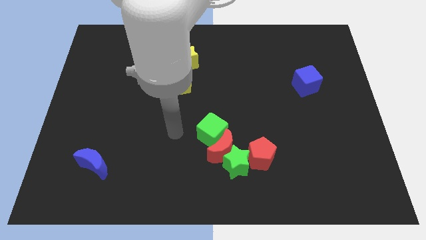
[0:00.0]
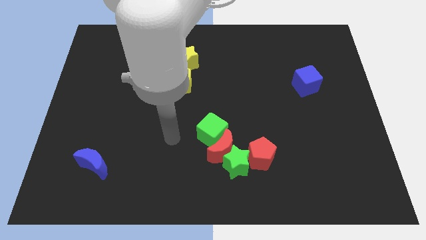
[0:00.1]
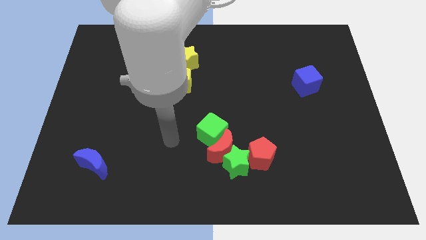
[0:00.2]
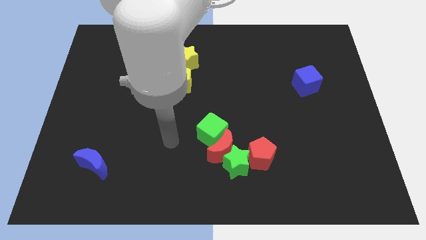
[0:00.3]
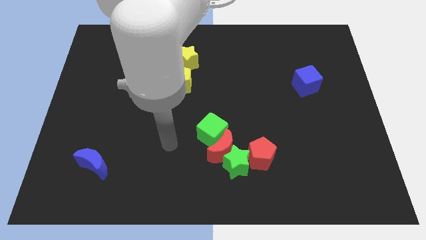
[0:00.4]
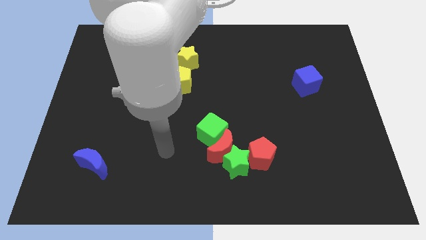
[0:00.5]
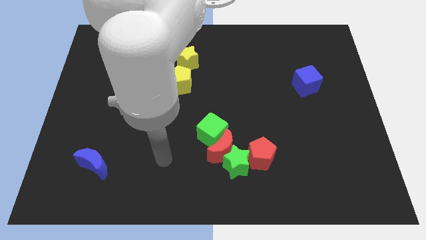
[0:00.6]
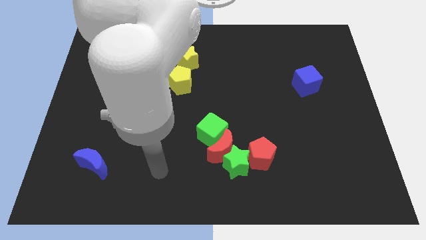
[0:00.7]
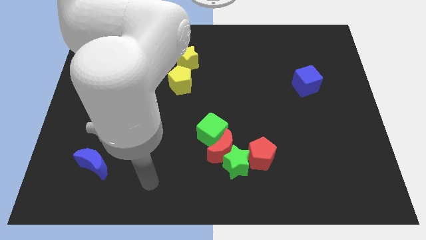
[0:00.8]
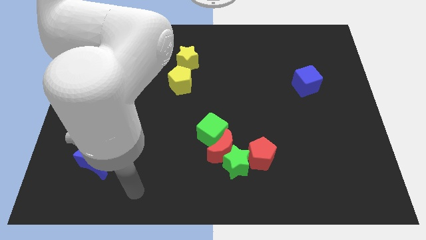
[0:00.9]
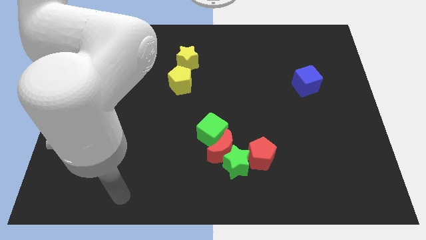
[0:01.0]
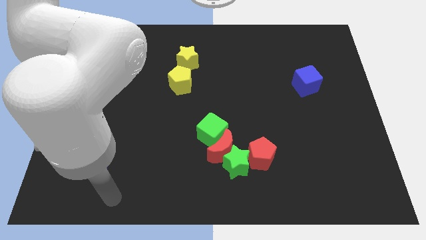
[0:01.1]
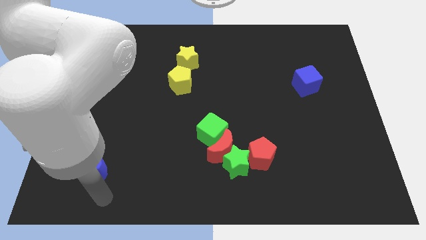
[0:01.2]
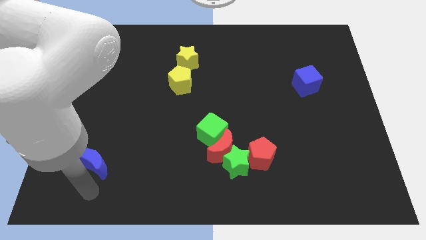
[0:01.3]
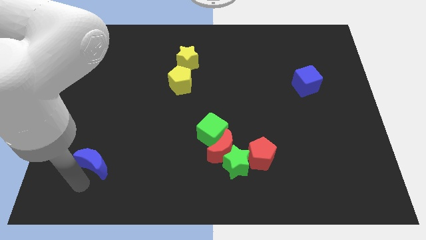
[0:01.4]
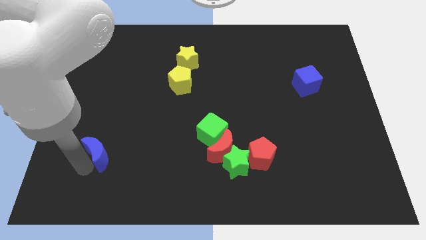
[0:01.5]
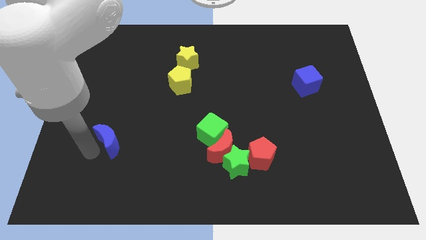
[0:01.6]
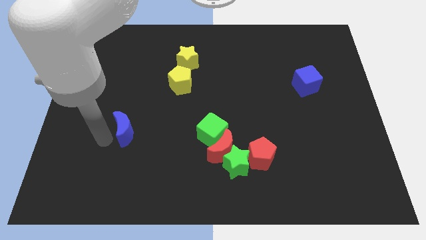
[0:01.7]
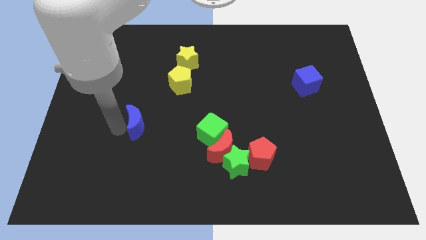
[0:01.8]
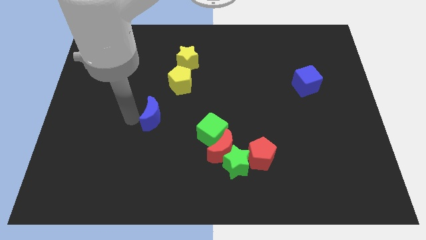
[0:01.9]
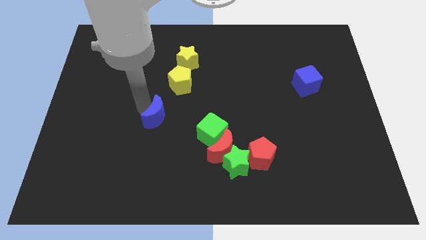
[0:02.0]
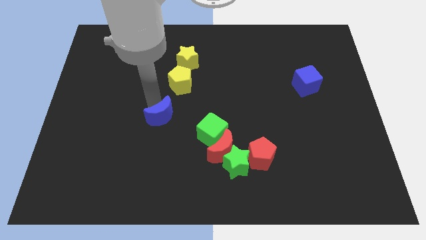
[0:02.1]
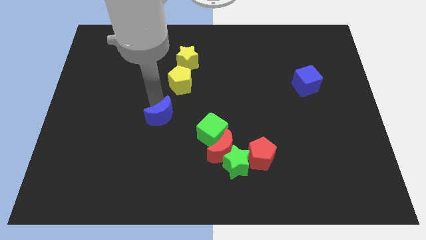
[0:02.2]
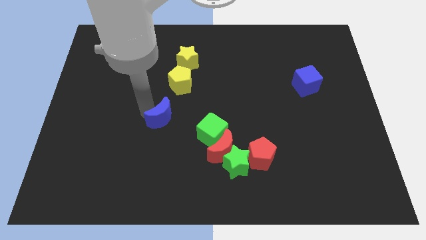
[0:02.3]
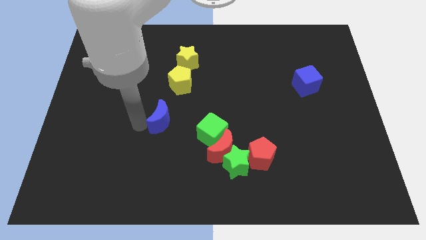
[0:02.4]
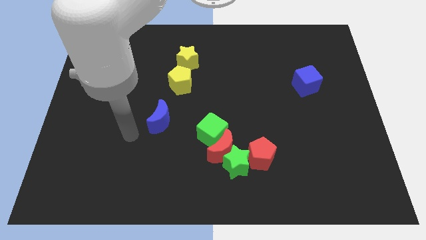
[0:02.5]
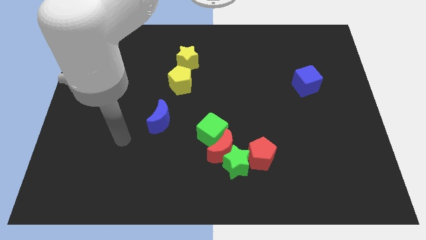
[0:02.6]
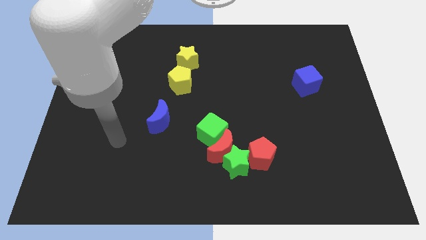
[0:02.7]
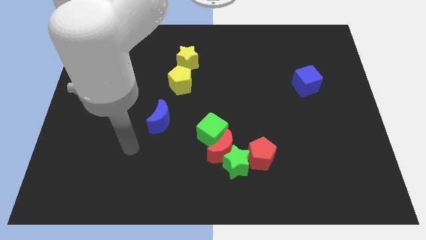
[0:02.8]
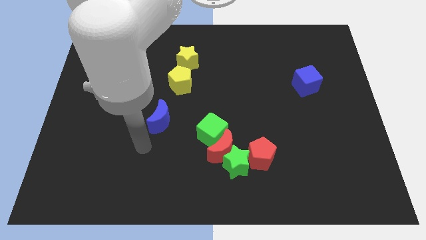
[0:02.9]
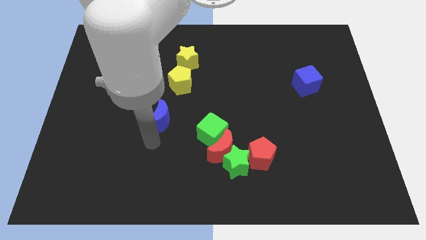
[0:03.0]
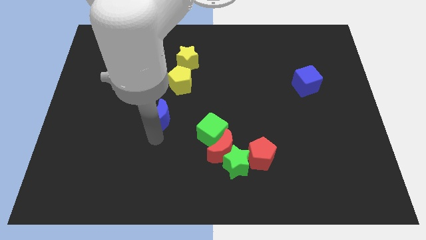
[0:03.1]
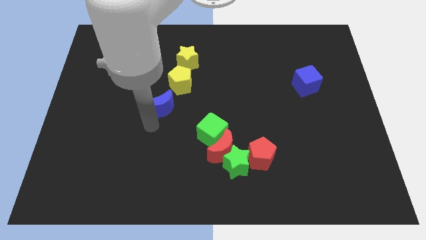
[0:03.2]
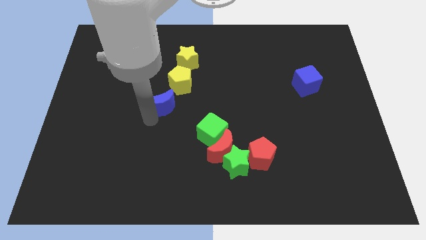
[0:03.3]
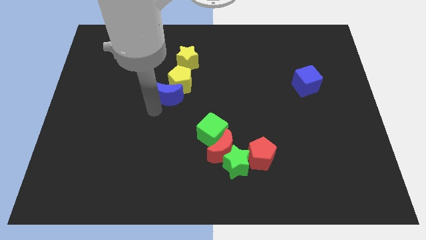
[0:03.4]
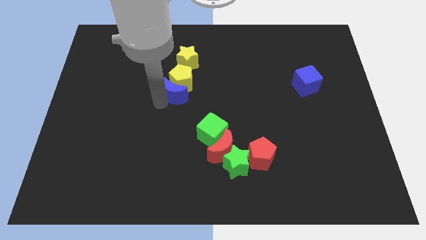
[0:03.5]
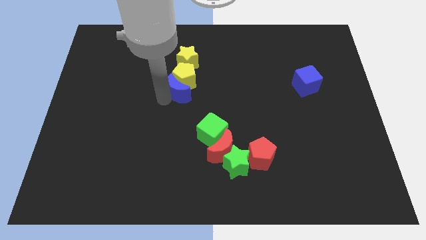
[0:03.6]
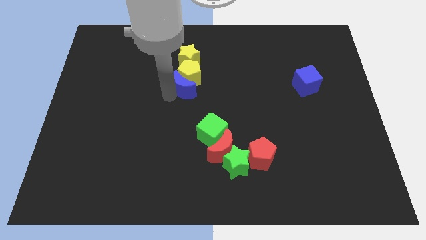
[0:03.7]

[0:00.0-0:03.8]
move the blue moon into the yellow pentagon

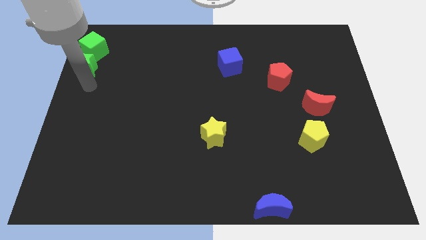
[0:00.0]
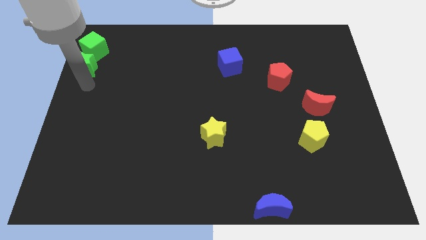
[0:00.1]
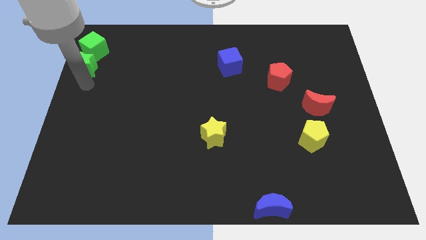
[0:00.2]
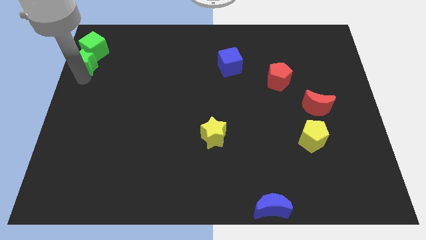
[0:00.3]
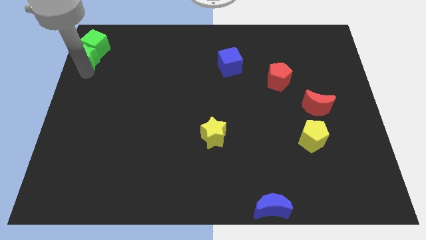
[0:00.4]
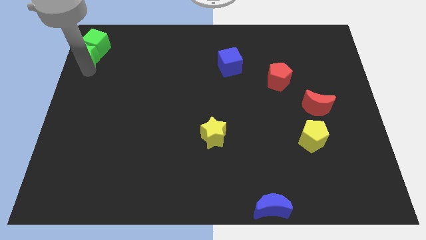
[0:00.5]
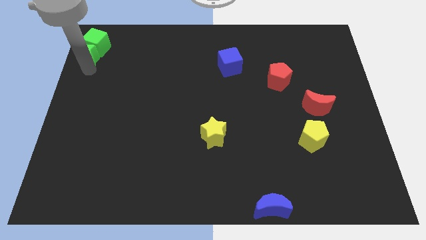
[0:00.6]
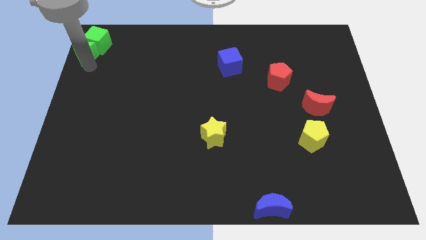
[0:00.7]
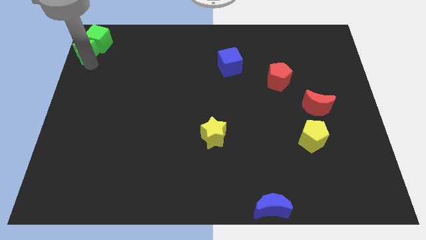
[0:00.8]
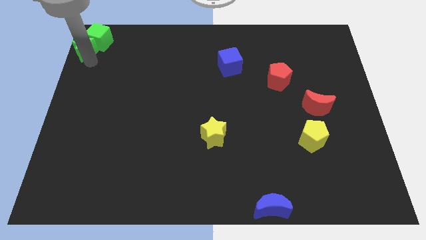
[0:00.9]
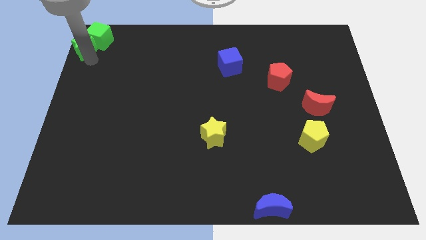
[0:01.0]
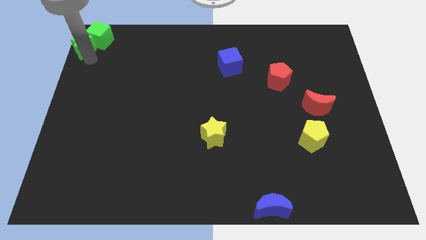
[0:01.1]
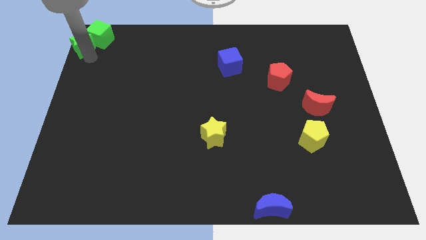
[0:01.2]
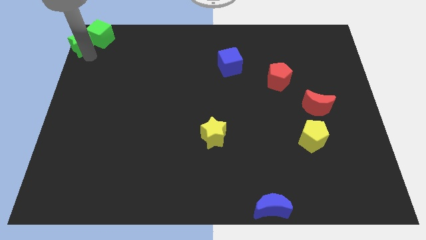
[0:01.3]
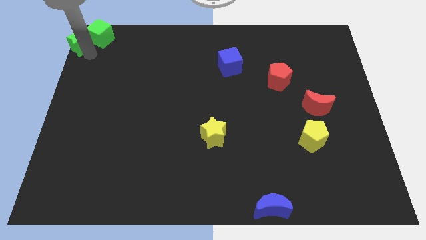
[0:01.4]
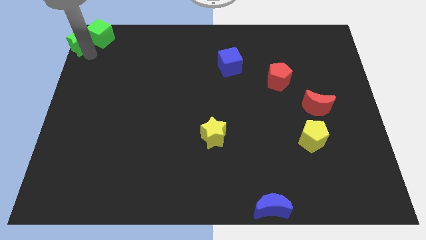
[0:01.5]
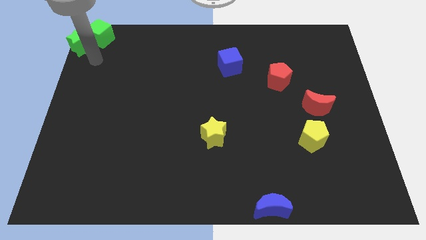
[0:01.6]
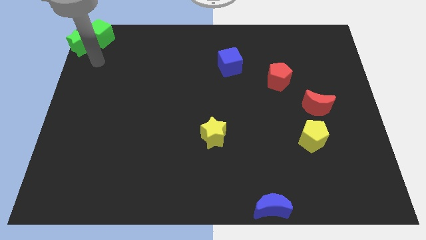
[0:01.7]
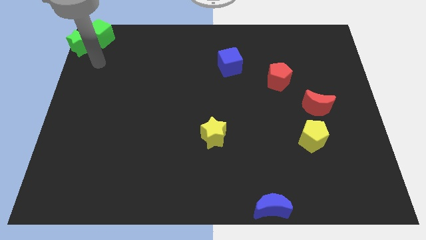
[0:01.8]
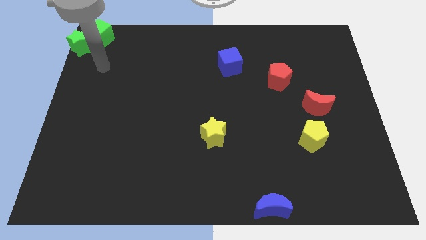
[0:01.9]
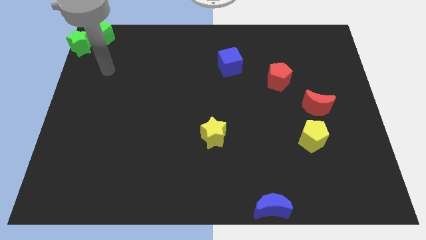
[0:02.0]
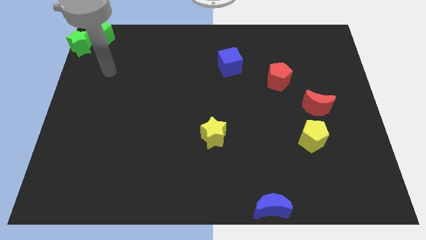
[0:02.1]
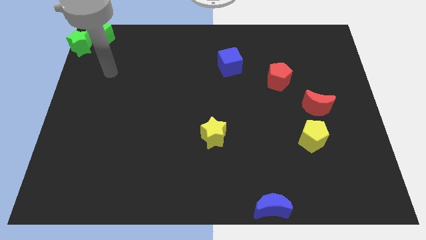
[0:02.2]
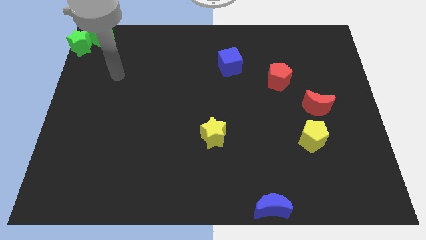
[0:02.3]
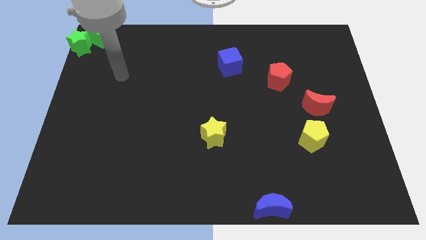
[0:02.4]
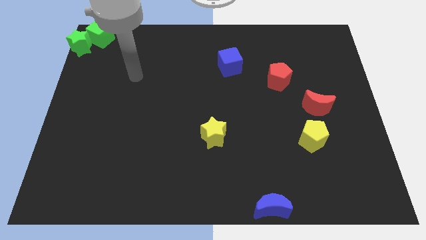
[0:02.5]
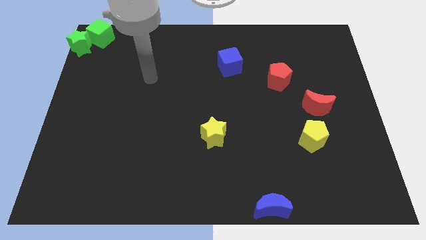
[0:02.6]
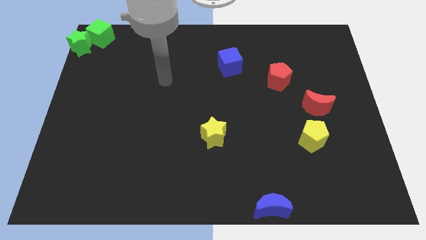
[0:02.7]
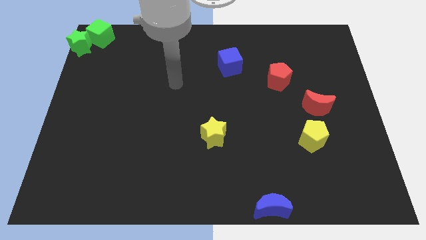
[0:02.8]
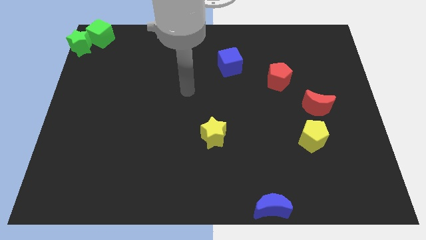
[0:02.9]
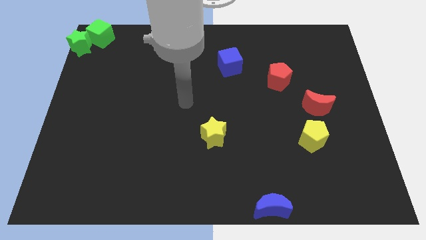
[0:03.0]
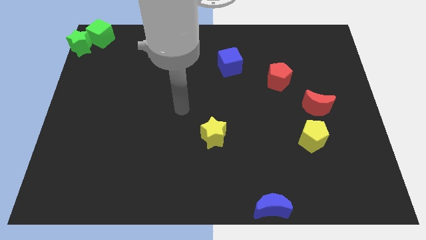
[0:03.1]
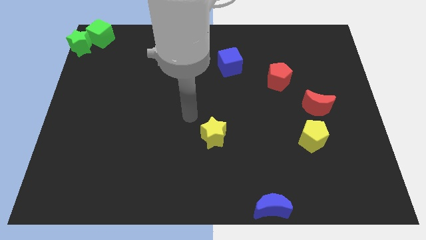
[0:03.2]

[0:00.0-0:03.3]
push green cube along with green star to the top left corner of the board

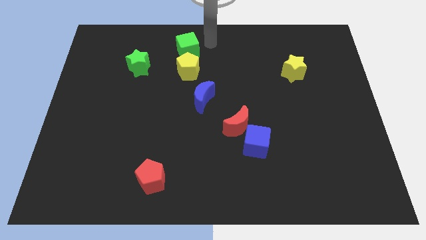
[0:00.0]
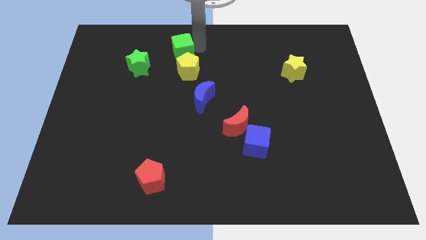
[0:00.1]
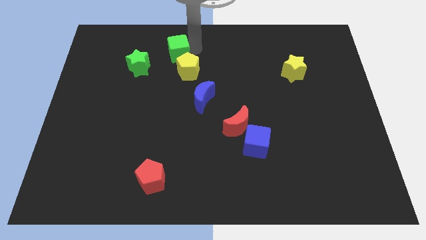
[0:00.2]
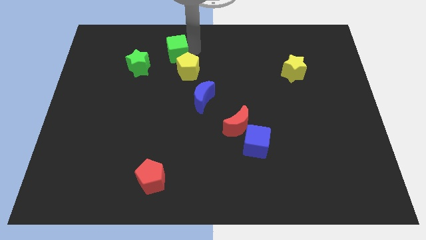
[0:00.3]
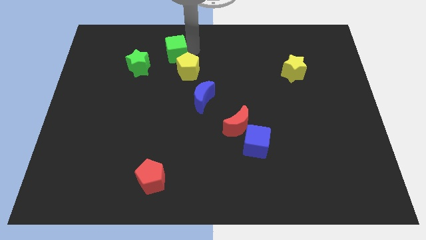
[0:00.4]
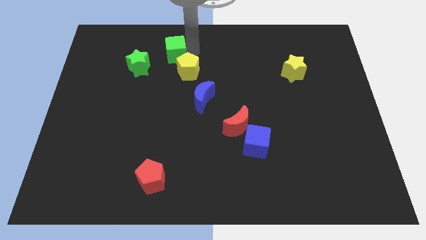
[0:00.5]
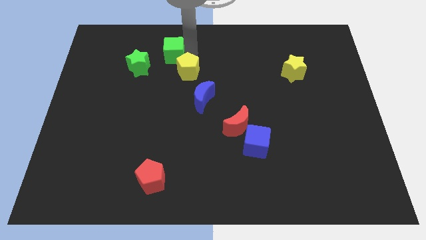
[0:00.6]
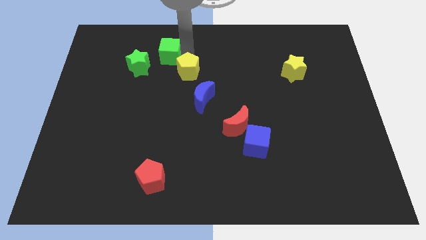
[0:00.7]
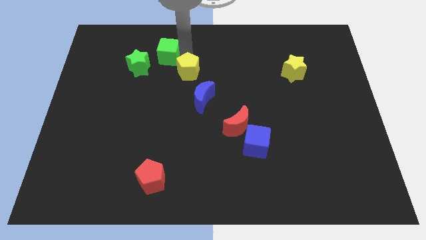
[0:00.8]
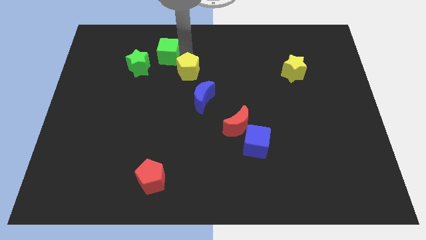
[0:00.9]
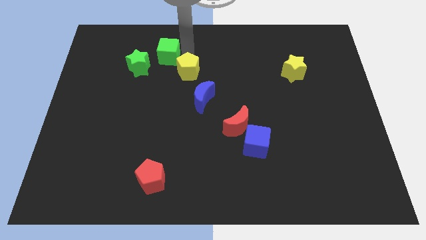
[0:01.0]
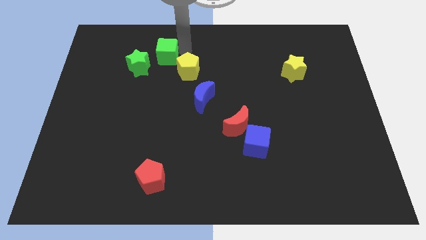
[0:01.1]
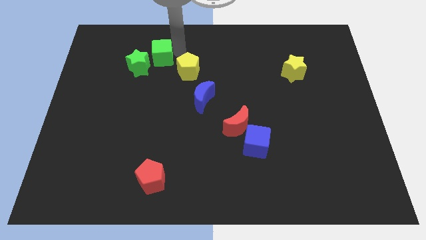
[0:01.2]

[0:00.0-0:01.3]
place the green cube to the top left of the yellow pentagon

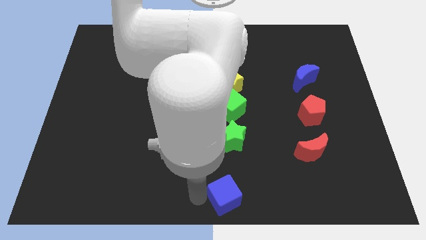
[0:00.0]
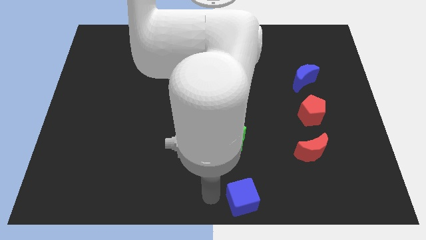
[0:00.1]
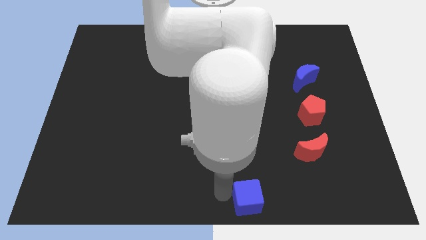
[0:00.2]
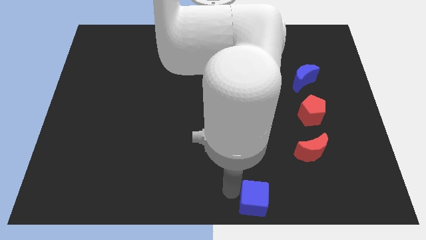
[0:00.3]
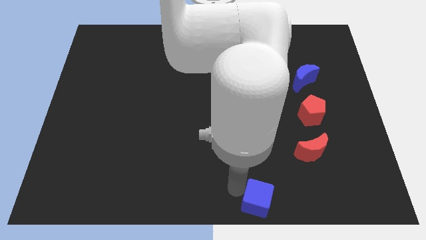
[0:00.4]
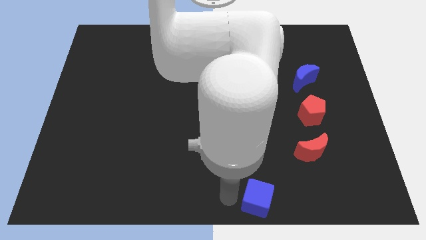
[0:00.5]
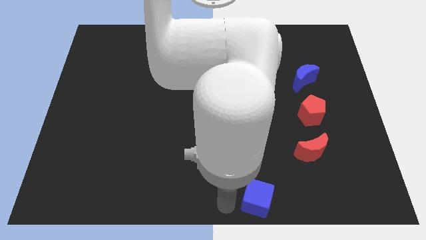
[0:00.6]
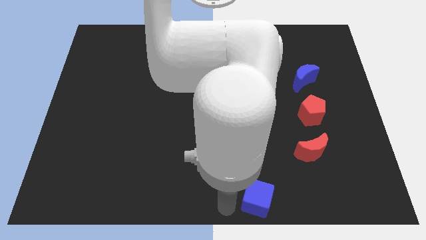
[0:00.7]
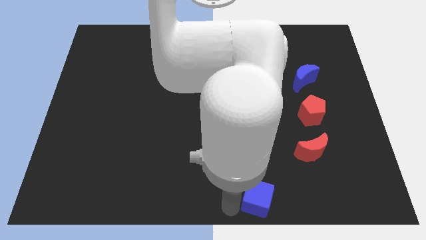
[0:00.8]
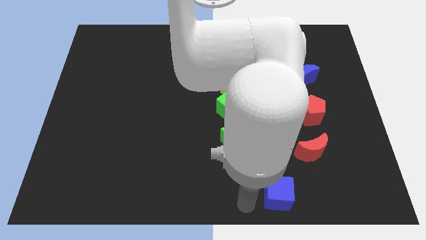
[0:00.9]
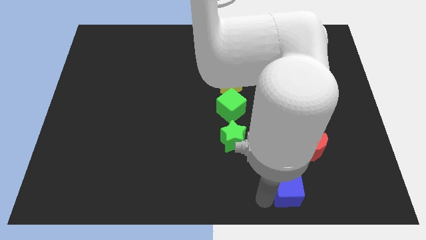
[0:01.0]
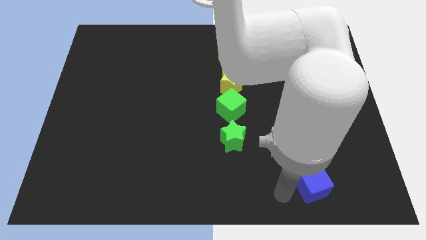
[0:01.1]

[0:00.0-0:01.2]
move the blue cube towards the bottom right corner of board
